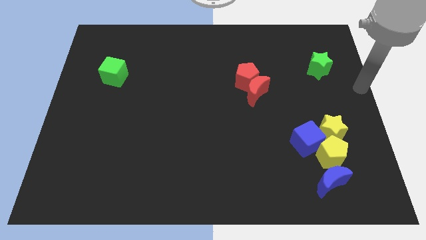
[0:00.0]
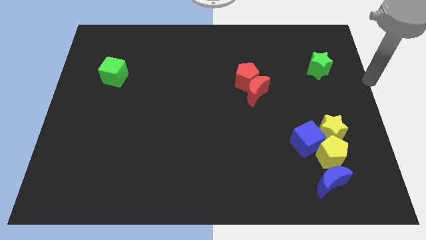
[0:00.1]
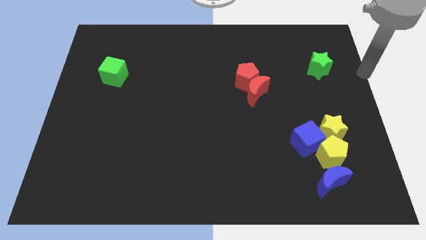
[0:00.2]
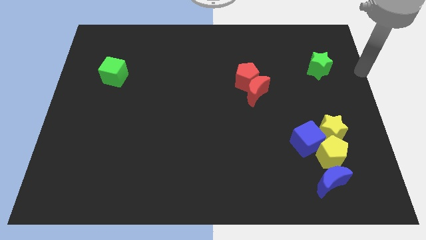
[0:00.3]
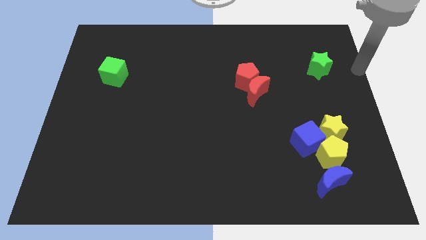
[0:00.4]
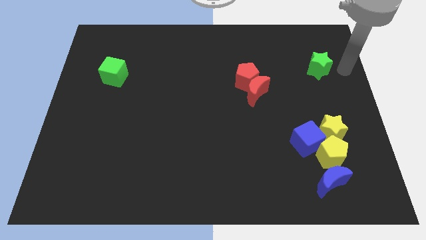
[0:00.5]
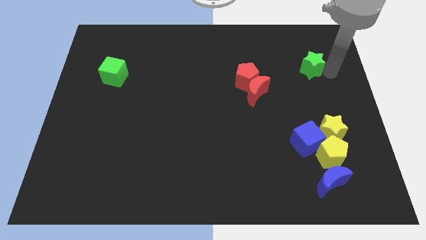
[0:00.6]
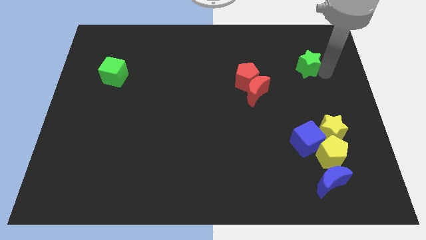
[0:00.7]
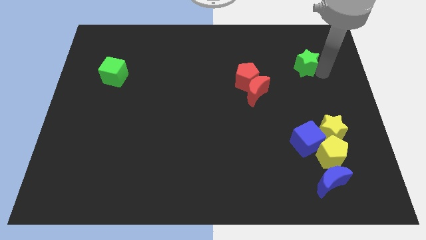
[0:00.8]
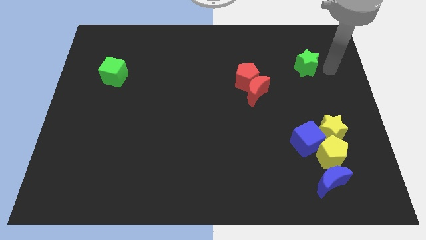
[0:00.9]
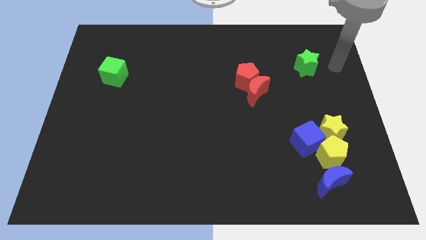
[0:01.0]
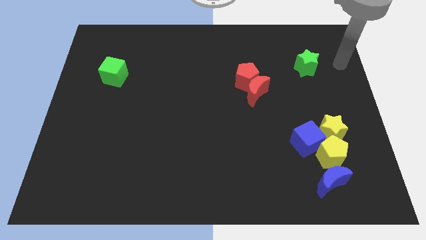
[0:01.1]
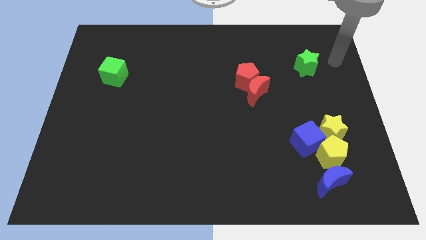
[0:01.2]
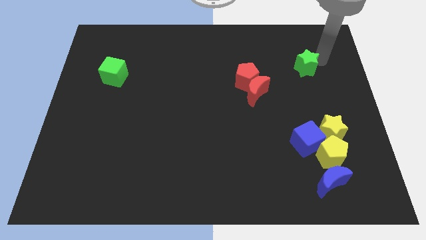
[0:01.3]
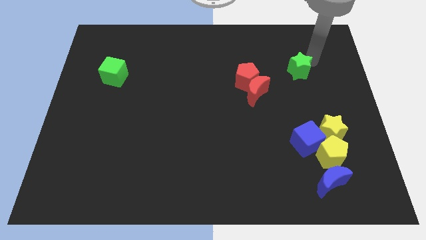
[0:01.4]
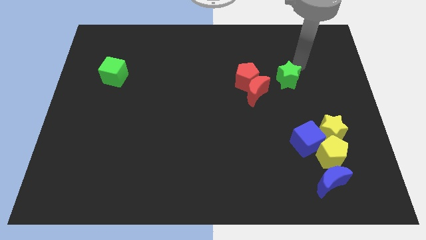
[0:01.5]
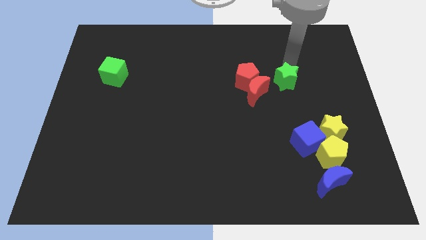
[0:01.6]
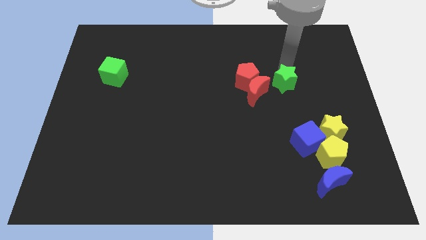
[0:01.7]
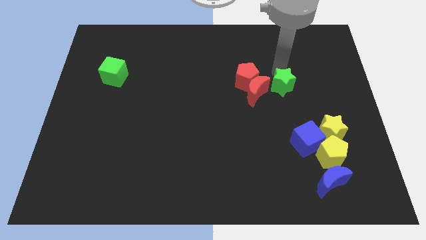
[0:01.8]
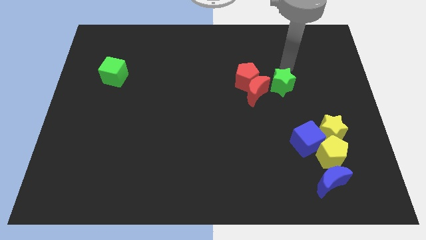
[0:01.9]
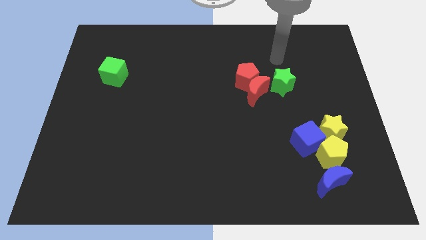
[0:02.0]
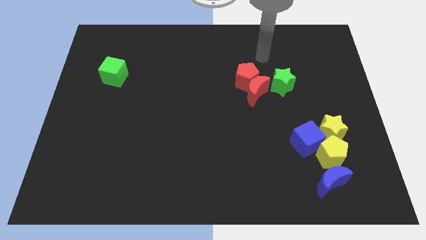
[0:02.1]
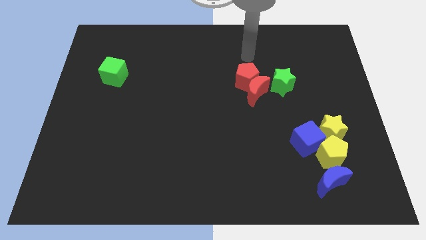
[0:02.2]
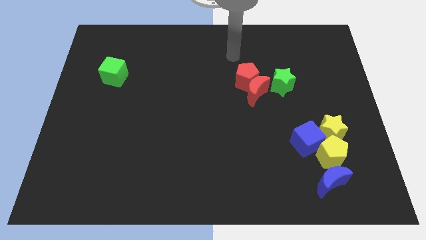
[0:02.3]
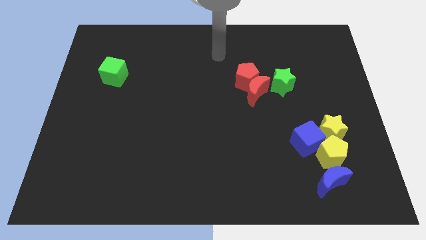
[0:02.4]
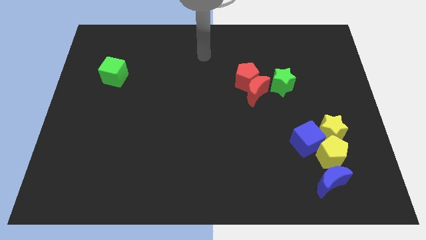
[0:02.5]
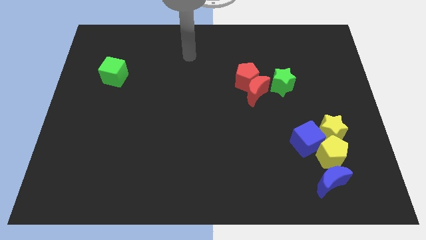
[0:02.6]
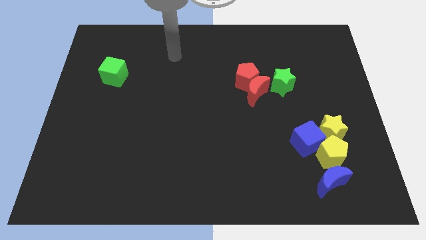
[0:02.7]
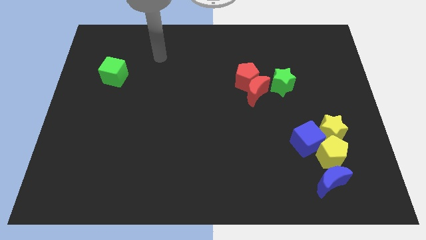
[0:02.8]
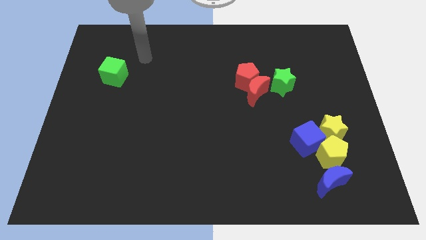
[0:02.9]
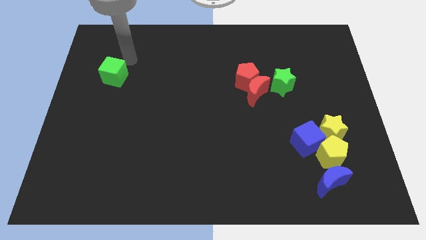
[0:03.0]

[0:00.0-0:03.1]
push green star right to the red crescent

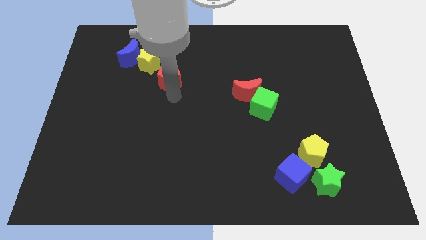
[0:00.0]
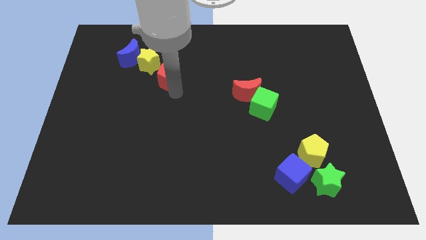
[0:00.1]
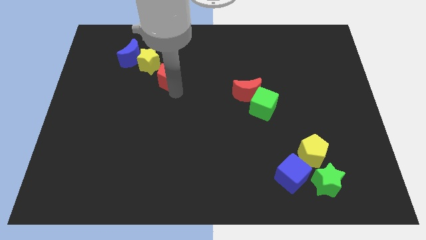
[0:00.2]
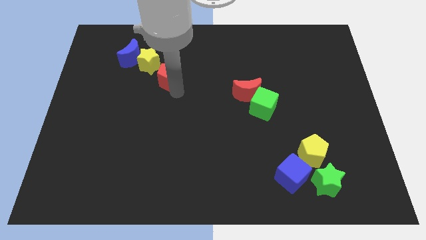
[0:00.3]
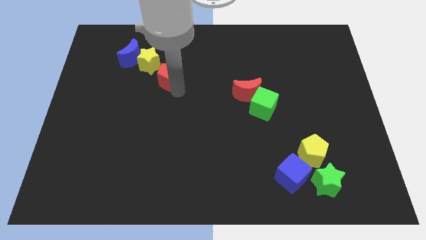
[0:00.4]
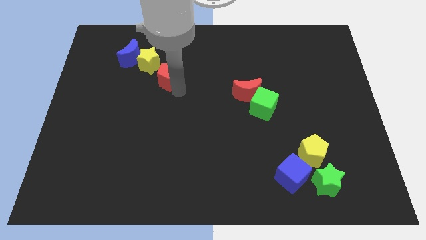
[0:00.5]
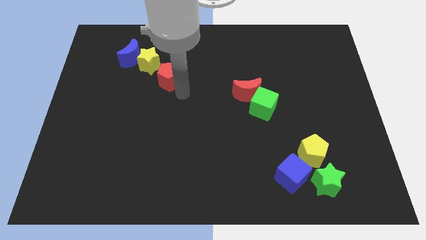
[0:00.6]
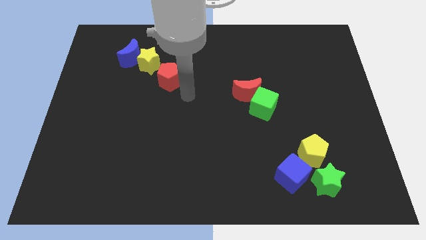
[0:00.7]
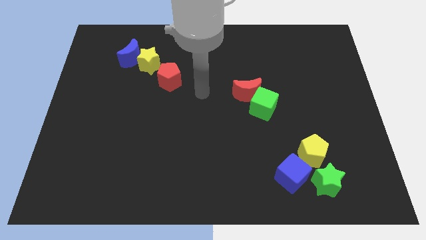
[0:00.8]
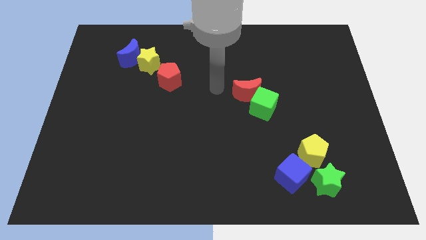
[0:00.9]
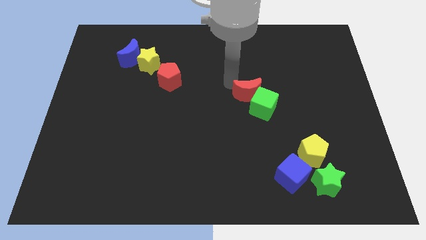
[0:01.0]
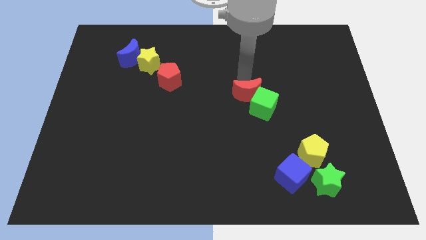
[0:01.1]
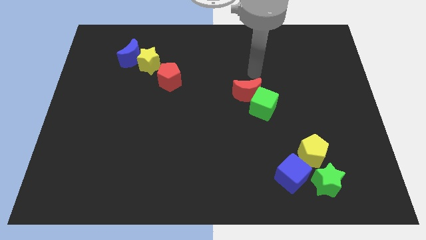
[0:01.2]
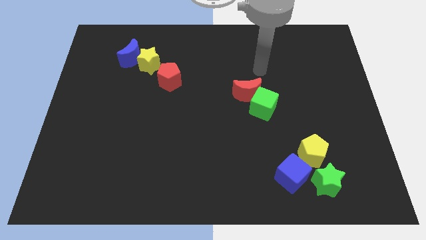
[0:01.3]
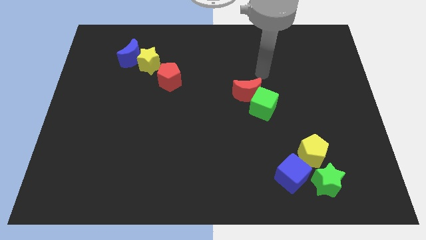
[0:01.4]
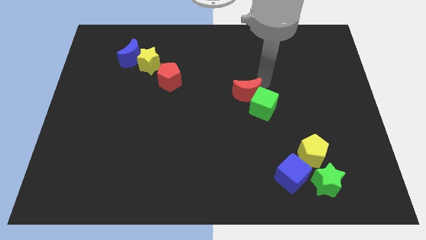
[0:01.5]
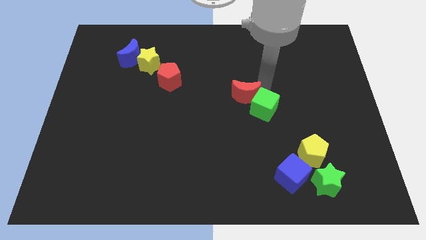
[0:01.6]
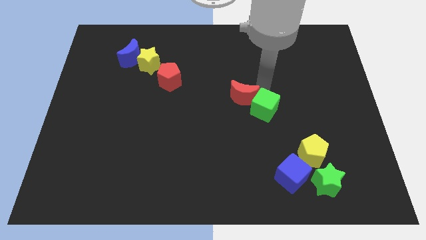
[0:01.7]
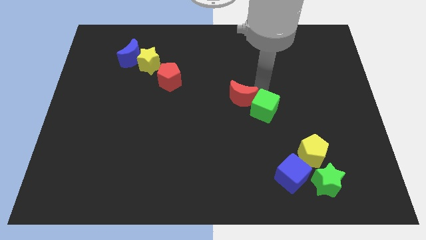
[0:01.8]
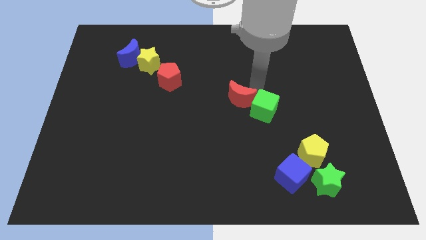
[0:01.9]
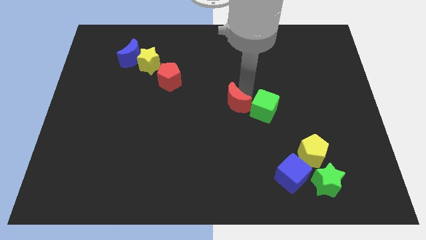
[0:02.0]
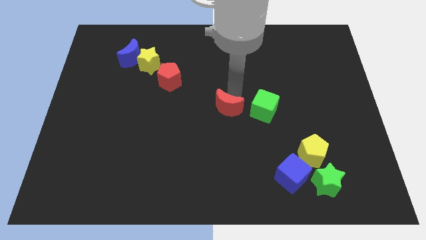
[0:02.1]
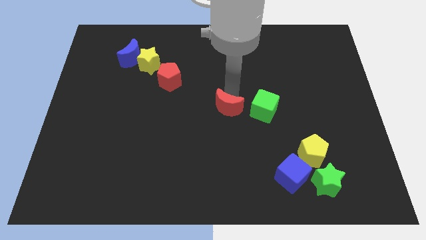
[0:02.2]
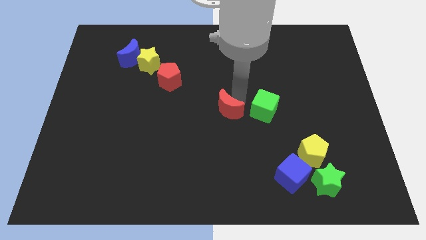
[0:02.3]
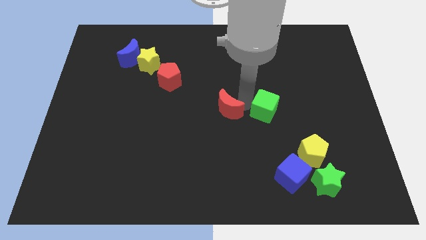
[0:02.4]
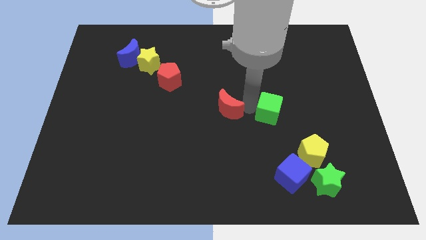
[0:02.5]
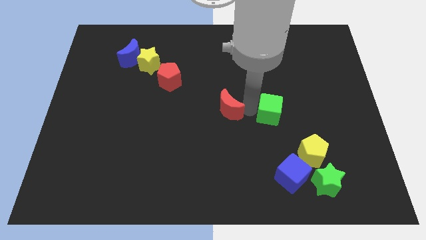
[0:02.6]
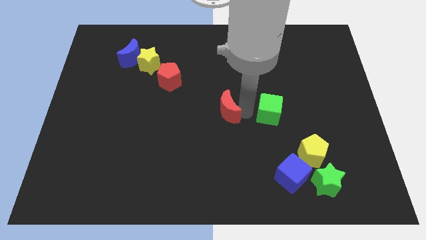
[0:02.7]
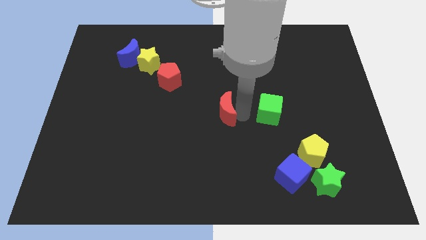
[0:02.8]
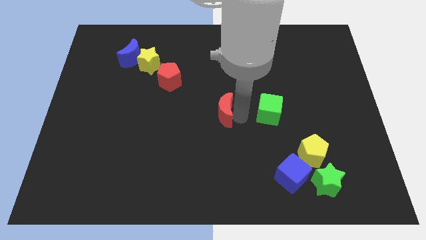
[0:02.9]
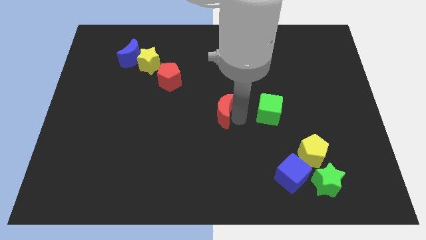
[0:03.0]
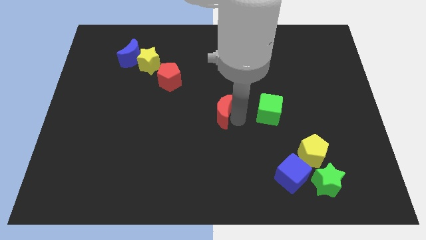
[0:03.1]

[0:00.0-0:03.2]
move the red crescent to the center of the board

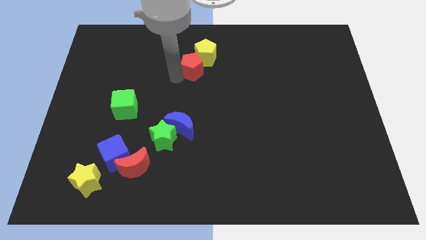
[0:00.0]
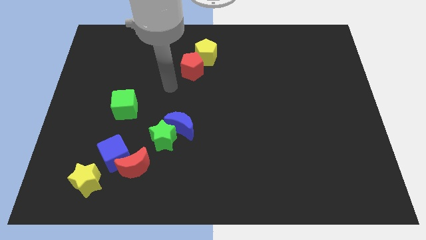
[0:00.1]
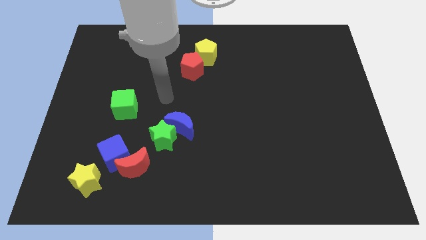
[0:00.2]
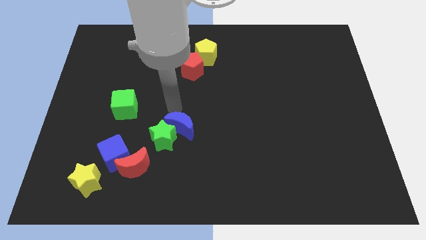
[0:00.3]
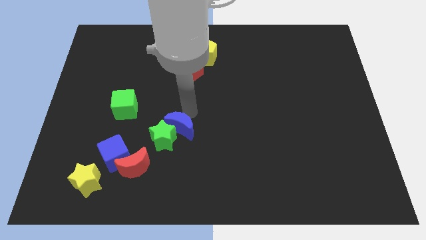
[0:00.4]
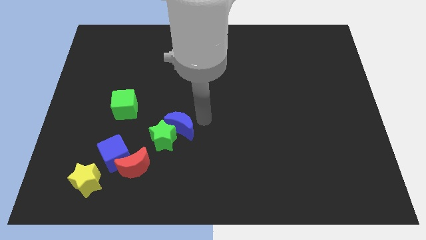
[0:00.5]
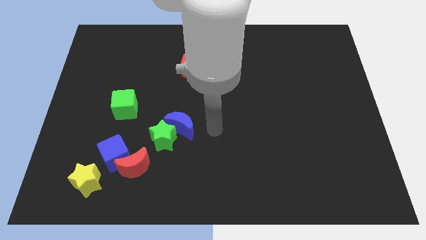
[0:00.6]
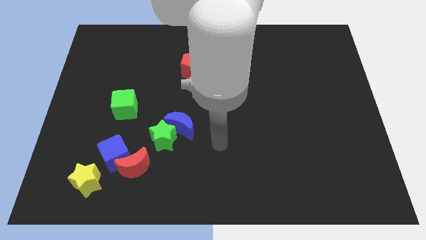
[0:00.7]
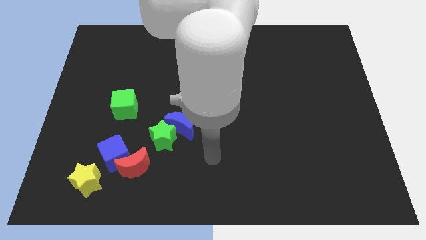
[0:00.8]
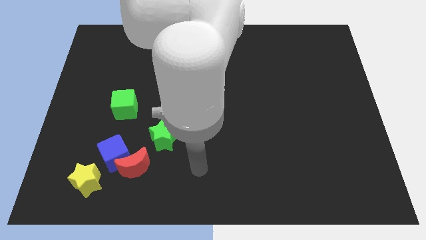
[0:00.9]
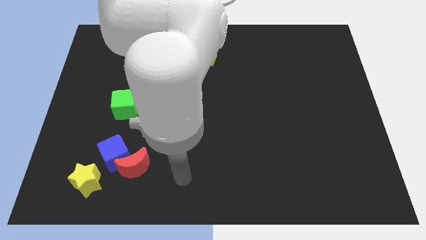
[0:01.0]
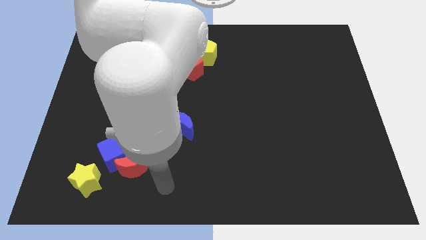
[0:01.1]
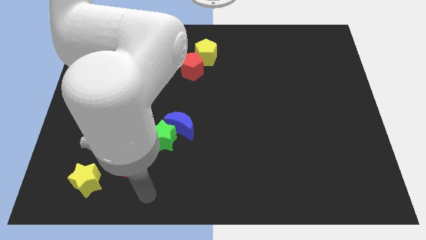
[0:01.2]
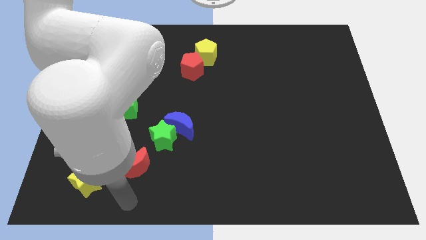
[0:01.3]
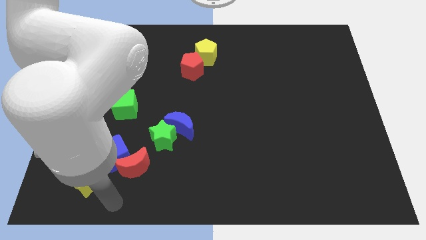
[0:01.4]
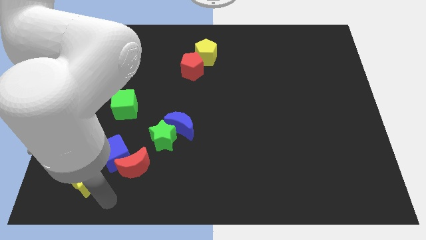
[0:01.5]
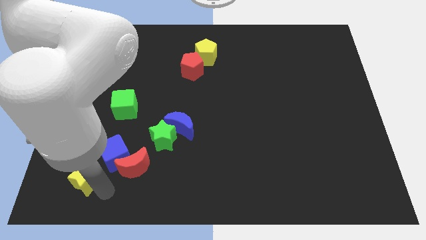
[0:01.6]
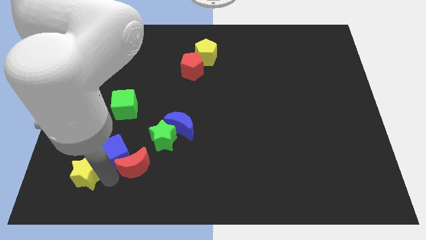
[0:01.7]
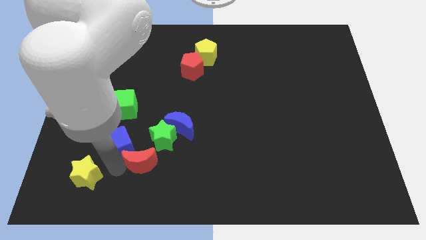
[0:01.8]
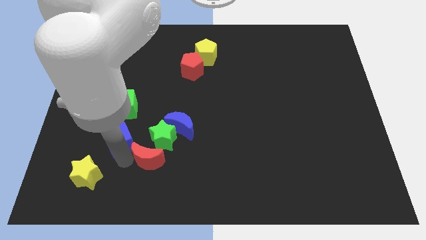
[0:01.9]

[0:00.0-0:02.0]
move your arm and slightly push the blue cube

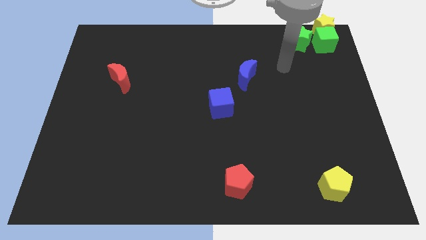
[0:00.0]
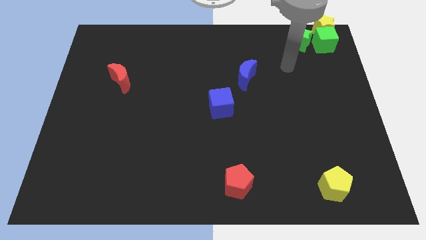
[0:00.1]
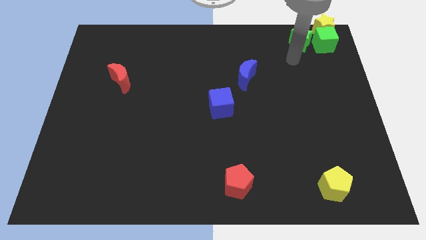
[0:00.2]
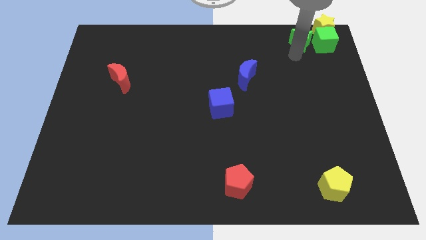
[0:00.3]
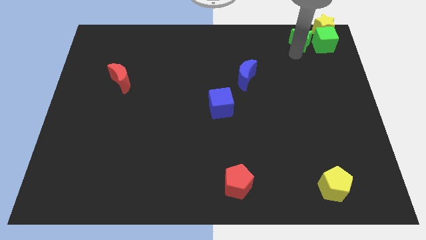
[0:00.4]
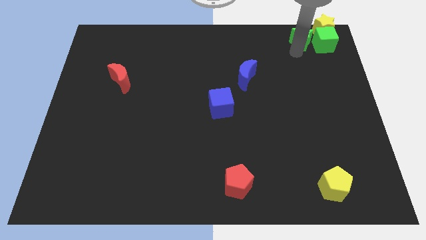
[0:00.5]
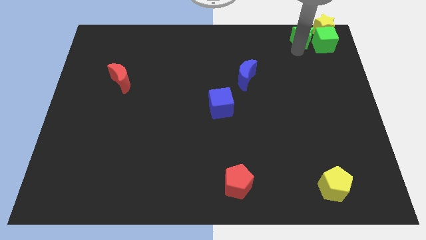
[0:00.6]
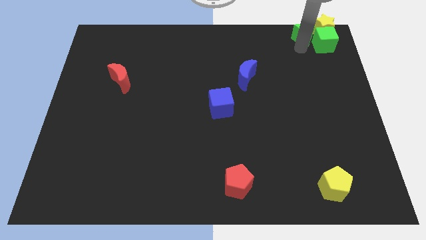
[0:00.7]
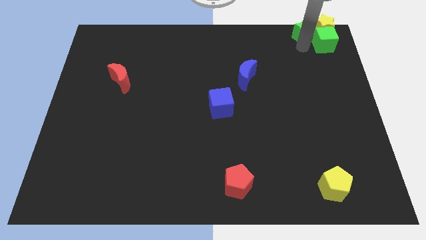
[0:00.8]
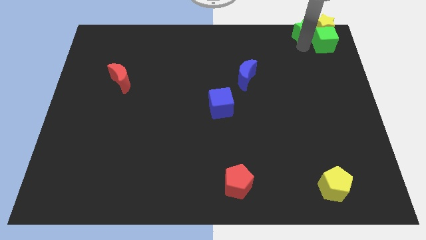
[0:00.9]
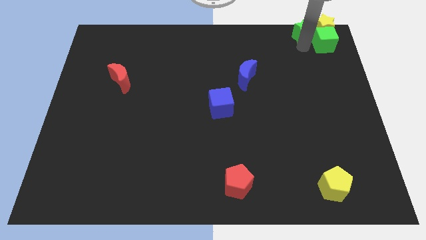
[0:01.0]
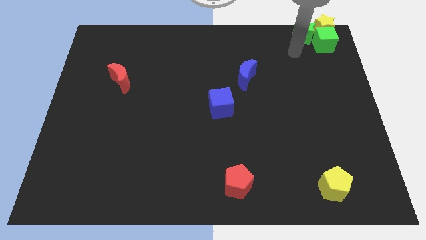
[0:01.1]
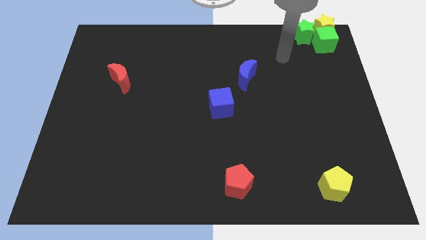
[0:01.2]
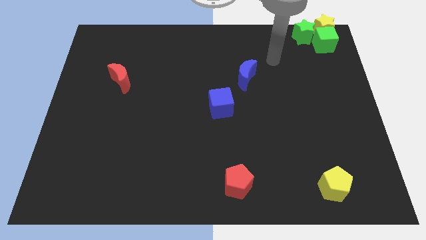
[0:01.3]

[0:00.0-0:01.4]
place green star to the left of yellow star
